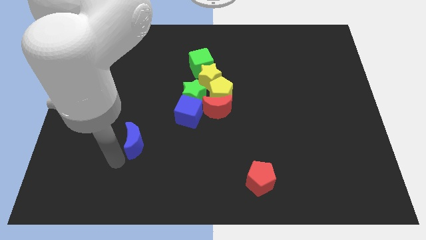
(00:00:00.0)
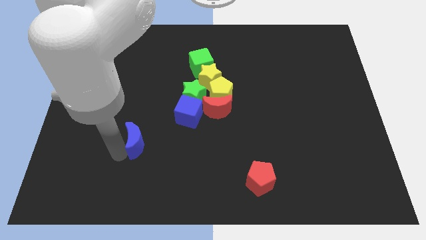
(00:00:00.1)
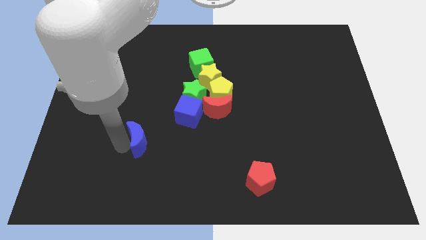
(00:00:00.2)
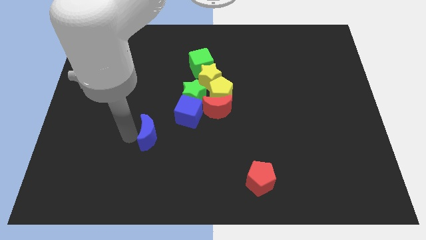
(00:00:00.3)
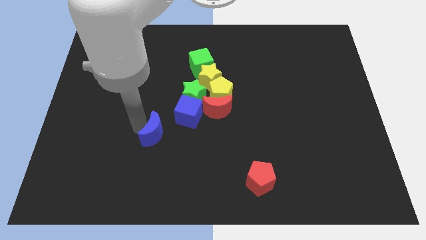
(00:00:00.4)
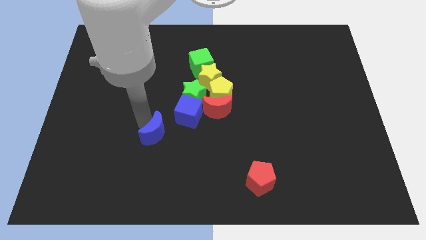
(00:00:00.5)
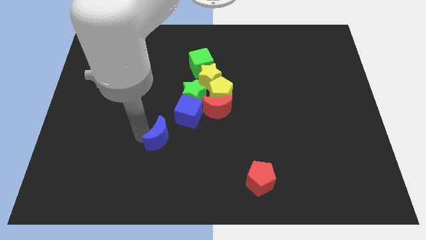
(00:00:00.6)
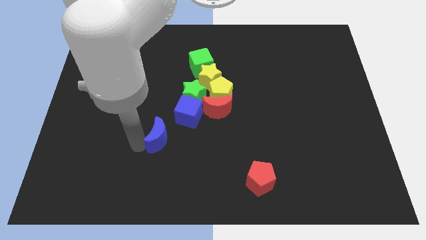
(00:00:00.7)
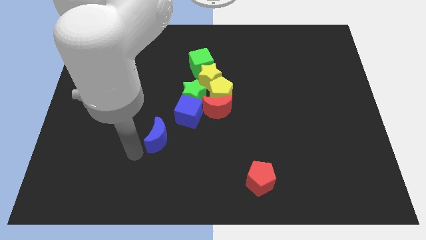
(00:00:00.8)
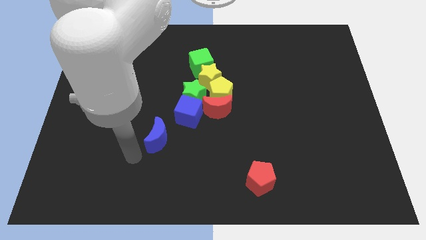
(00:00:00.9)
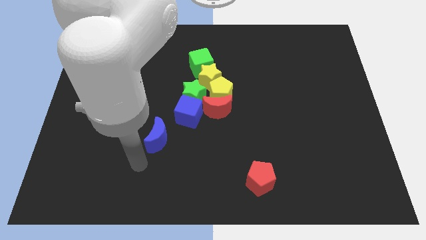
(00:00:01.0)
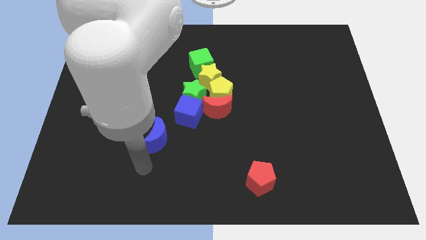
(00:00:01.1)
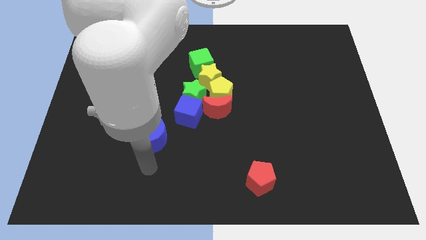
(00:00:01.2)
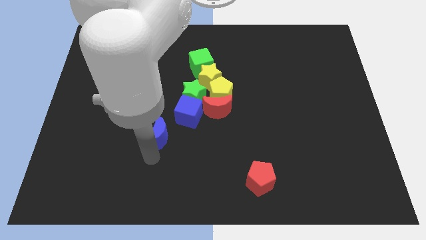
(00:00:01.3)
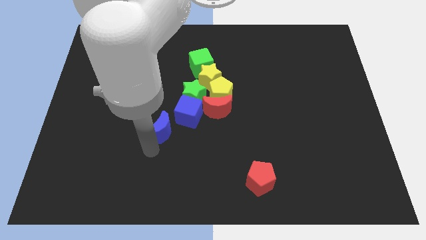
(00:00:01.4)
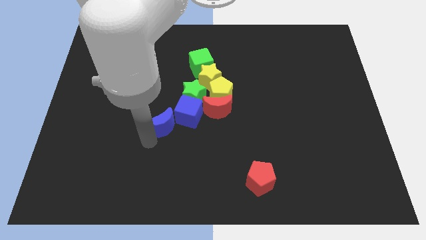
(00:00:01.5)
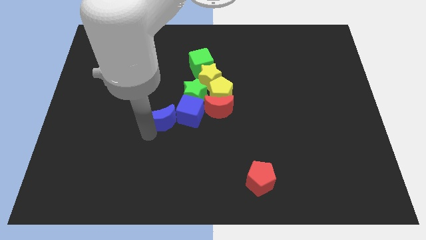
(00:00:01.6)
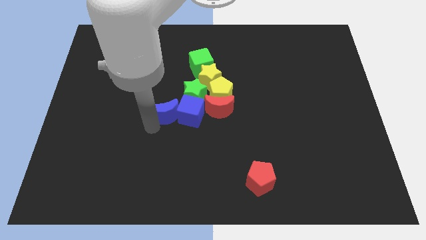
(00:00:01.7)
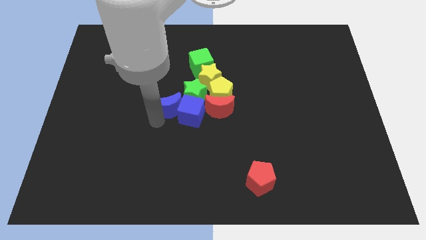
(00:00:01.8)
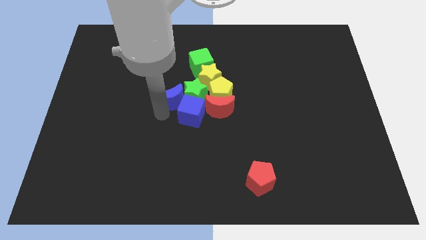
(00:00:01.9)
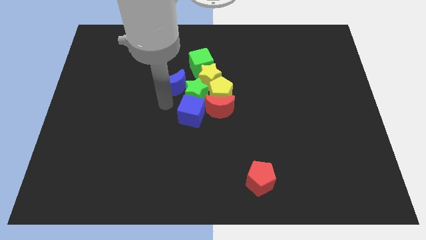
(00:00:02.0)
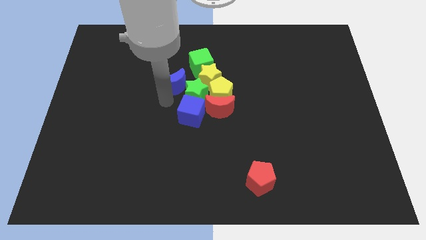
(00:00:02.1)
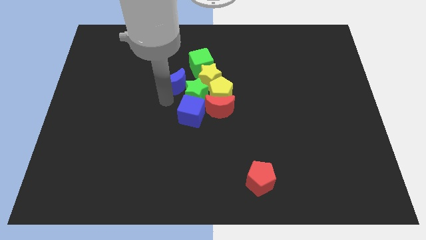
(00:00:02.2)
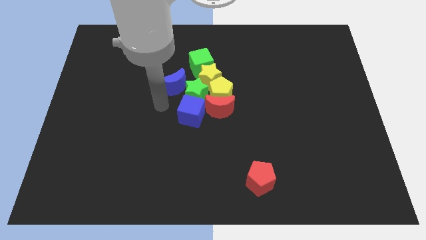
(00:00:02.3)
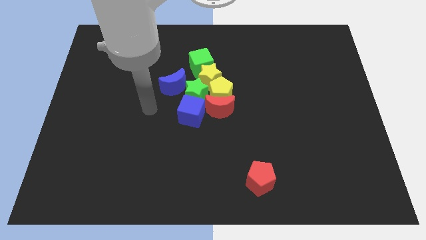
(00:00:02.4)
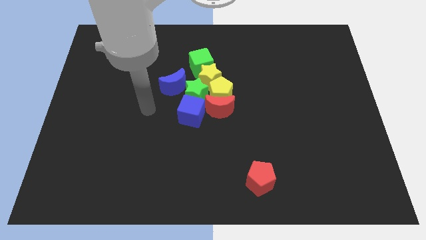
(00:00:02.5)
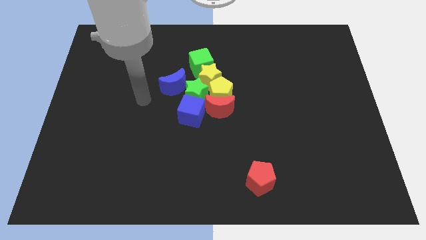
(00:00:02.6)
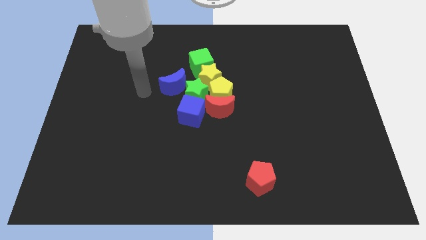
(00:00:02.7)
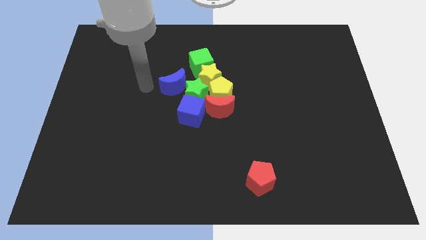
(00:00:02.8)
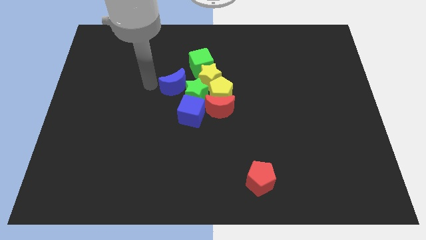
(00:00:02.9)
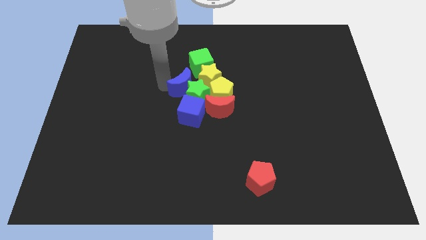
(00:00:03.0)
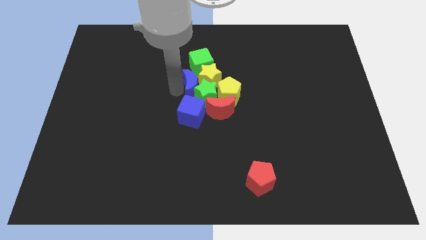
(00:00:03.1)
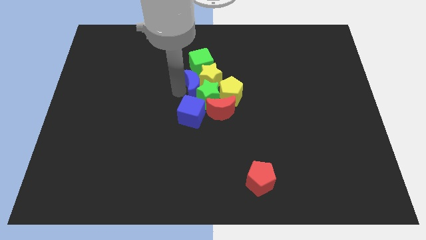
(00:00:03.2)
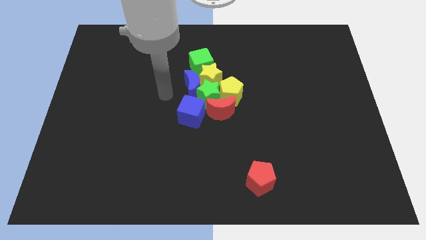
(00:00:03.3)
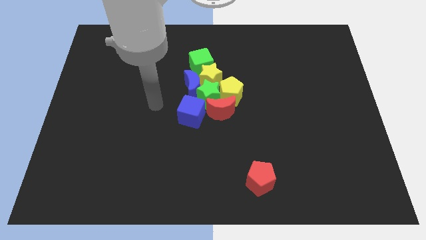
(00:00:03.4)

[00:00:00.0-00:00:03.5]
move blue crescent into the group of blocks

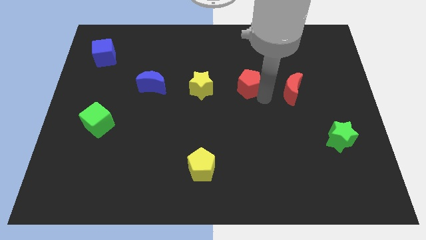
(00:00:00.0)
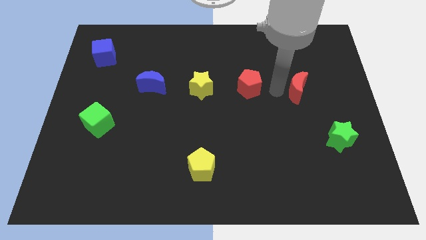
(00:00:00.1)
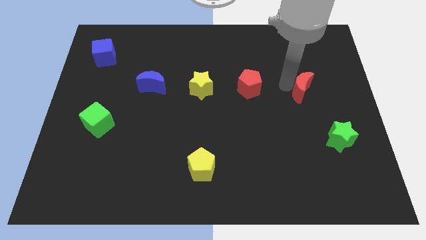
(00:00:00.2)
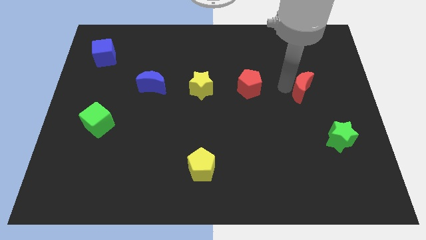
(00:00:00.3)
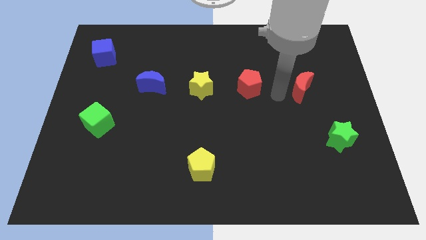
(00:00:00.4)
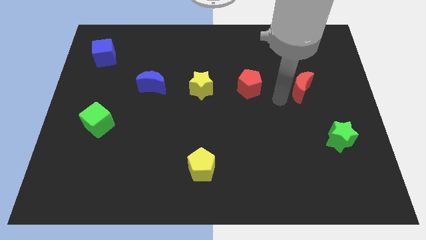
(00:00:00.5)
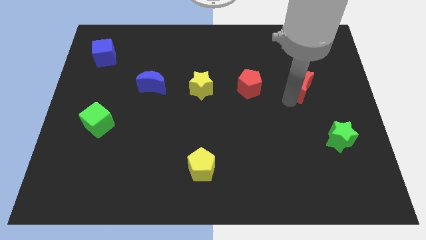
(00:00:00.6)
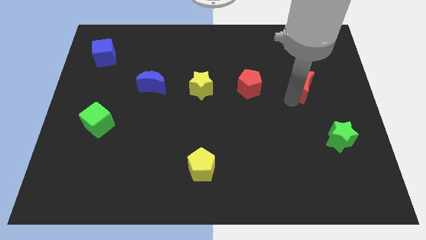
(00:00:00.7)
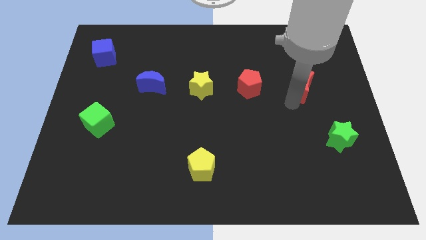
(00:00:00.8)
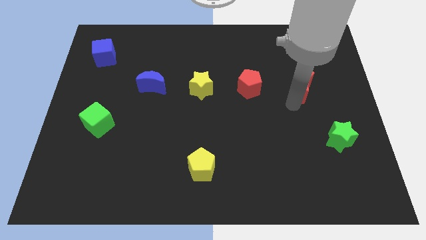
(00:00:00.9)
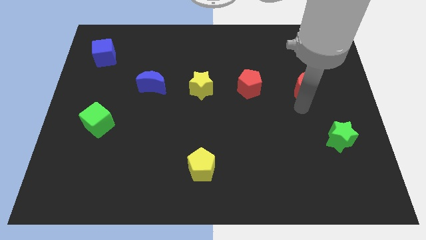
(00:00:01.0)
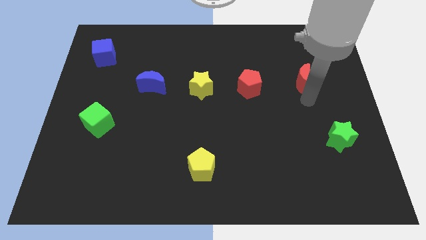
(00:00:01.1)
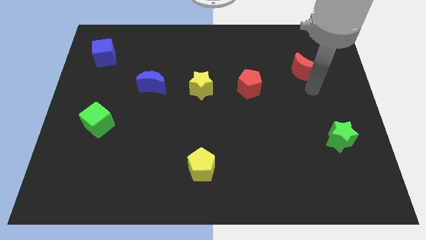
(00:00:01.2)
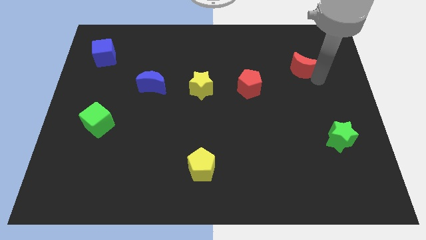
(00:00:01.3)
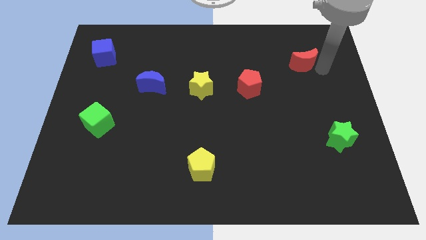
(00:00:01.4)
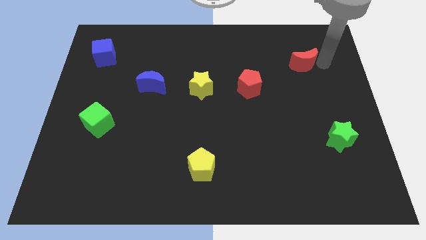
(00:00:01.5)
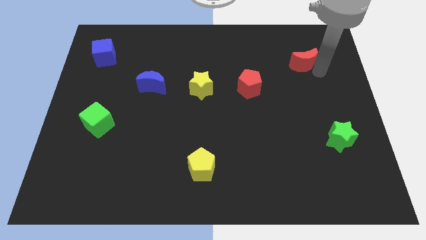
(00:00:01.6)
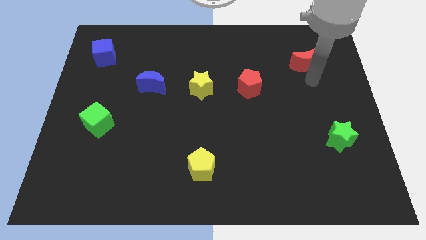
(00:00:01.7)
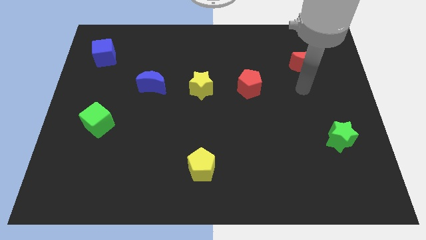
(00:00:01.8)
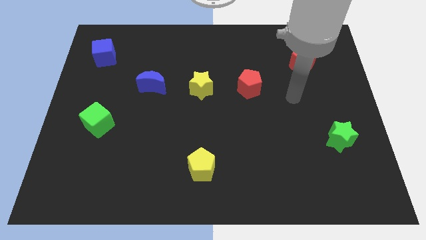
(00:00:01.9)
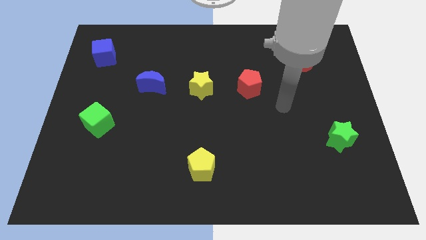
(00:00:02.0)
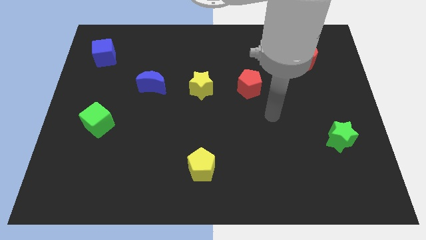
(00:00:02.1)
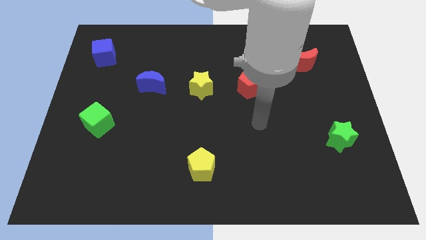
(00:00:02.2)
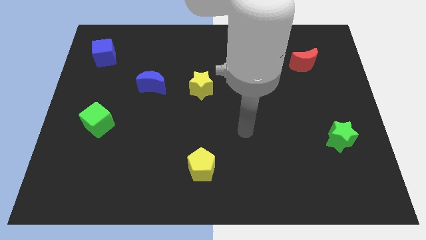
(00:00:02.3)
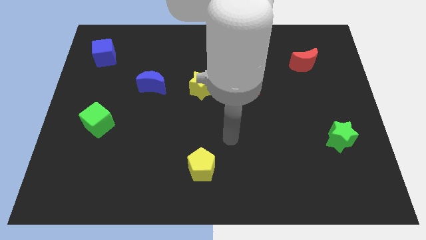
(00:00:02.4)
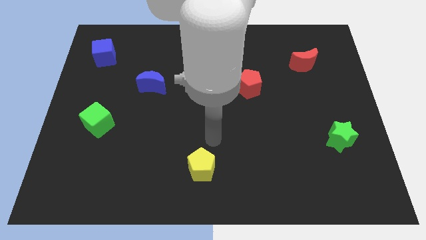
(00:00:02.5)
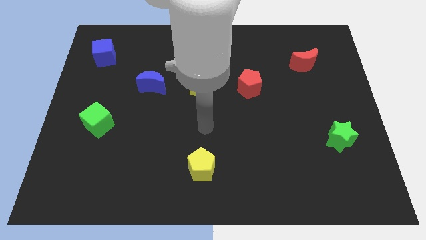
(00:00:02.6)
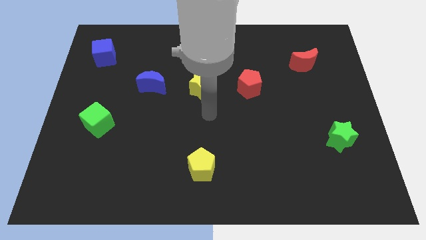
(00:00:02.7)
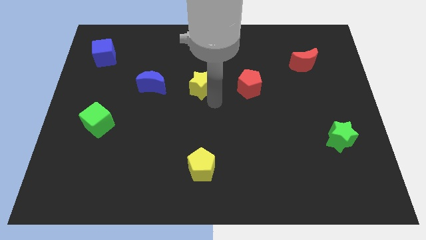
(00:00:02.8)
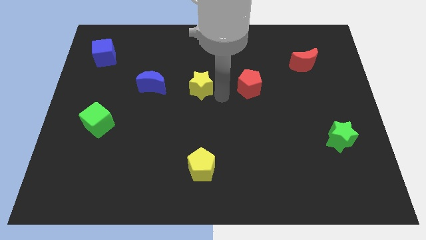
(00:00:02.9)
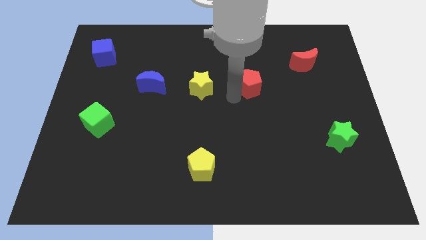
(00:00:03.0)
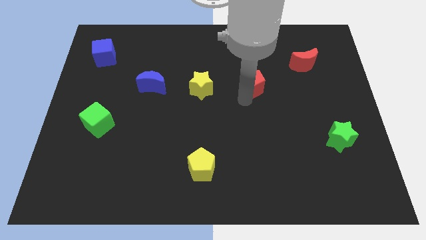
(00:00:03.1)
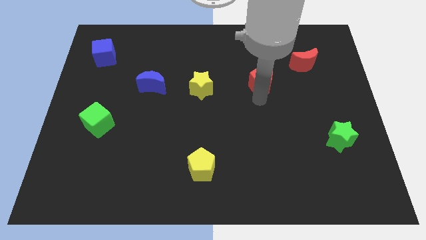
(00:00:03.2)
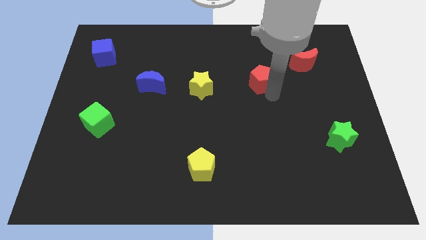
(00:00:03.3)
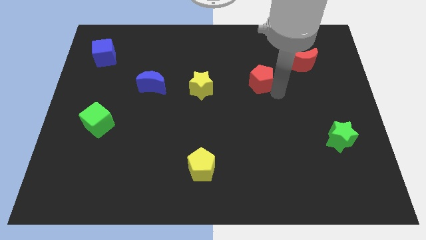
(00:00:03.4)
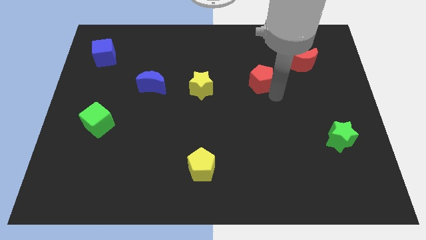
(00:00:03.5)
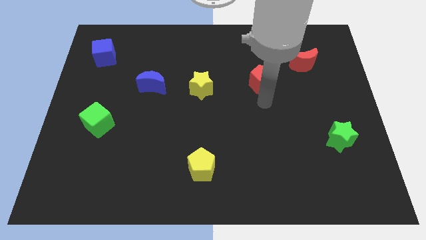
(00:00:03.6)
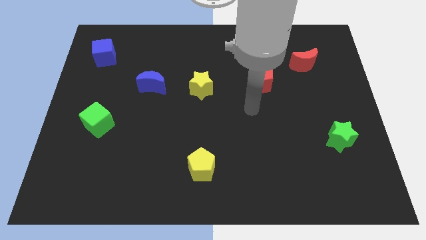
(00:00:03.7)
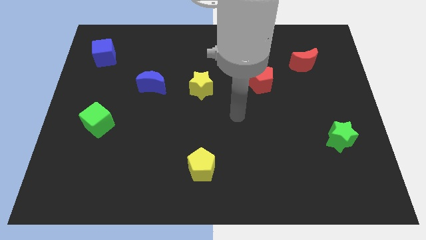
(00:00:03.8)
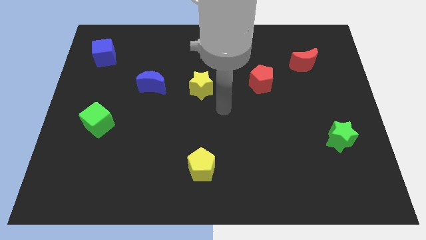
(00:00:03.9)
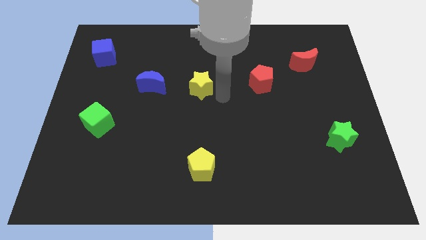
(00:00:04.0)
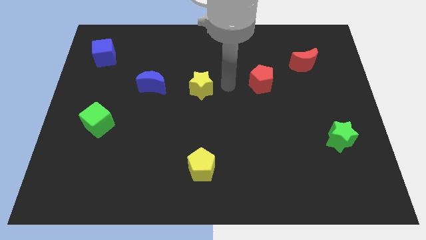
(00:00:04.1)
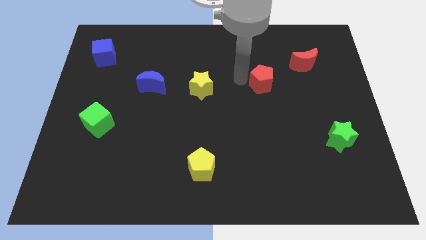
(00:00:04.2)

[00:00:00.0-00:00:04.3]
place the red crescent towards the top right side of the red pentagon

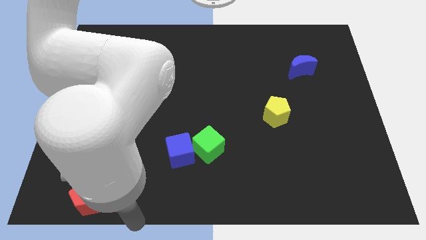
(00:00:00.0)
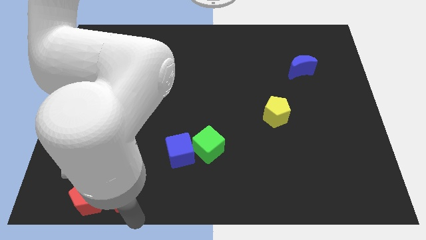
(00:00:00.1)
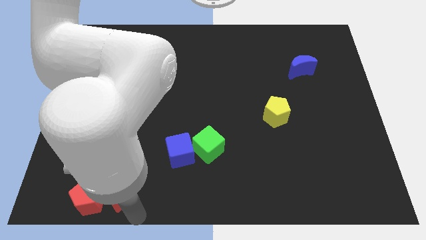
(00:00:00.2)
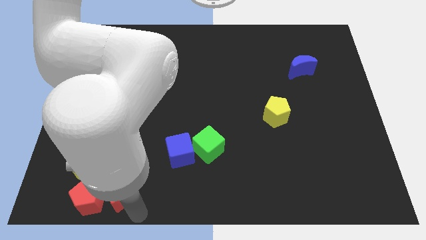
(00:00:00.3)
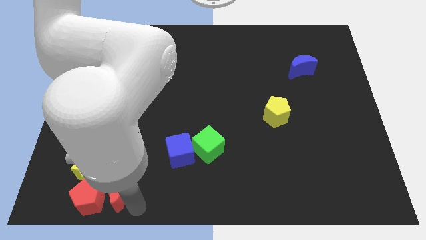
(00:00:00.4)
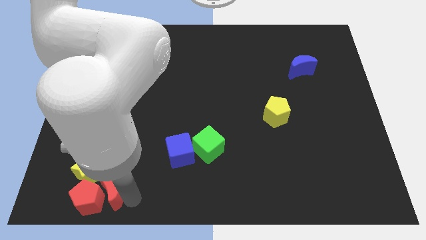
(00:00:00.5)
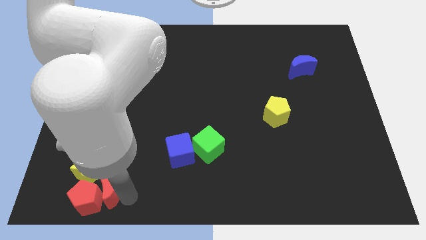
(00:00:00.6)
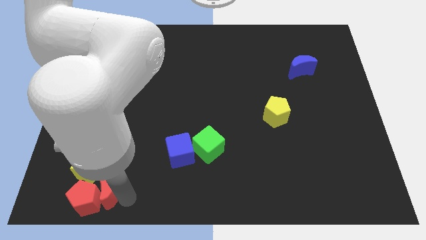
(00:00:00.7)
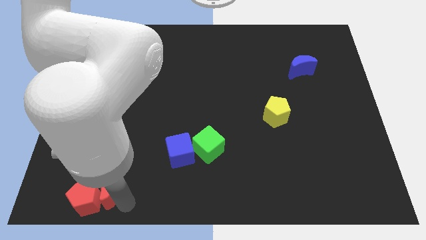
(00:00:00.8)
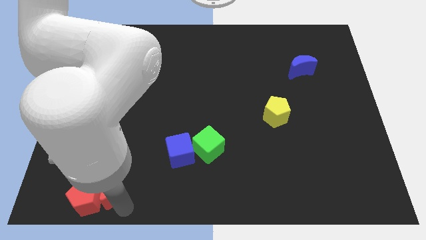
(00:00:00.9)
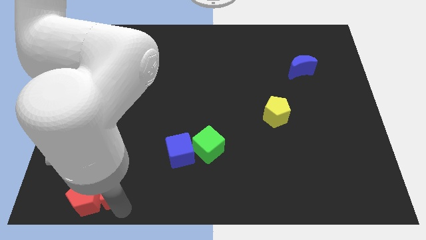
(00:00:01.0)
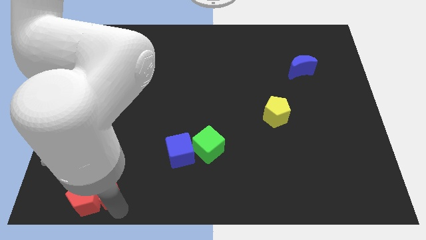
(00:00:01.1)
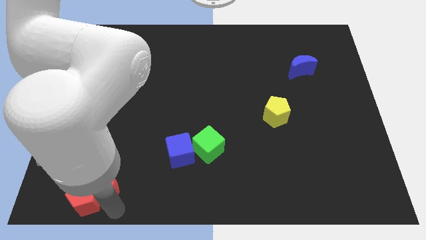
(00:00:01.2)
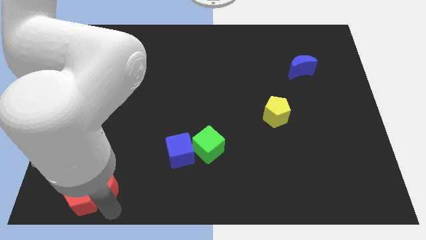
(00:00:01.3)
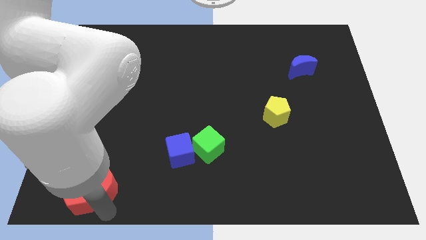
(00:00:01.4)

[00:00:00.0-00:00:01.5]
push the red pentagon and red crescent towards the yellow star
